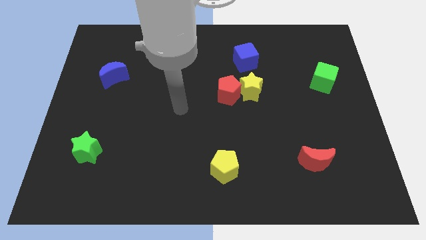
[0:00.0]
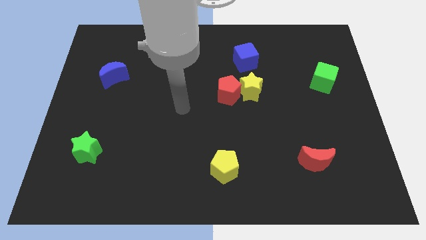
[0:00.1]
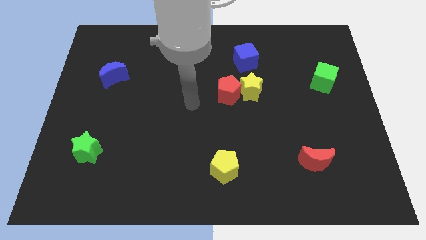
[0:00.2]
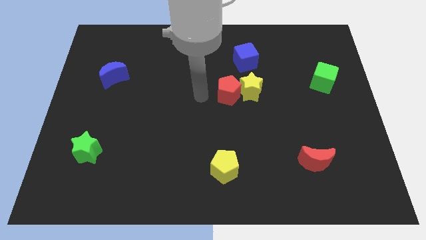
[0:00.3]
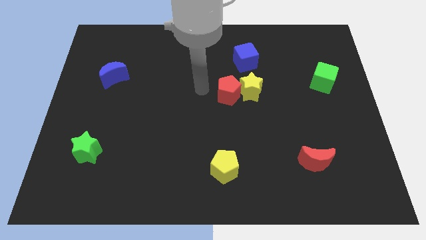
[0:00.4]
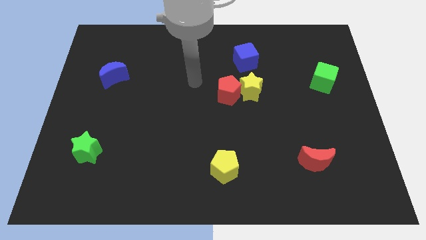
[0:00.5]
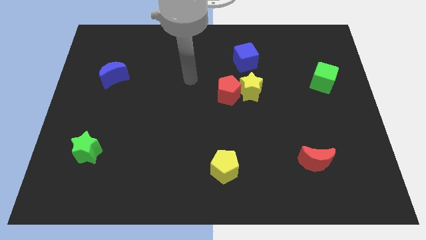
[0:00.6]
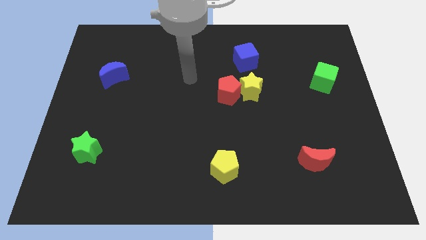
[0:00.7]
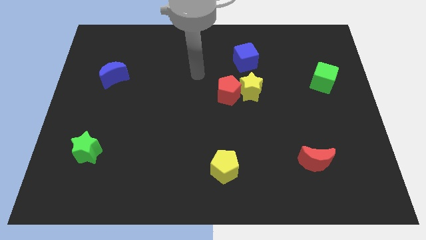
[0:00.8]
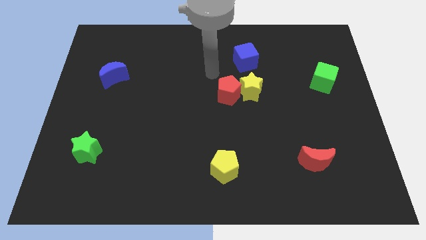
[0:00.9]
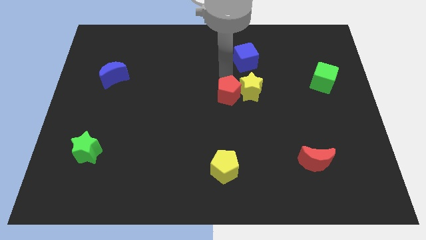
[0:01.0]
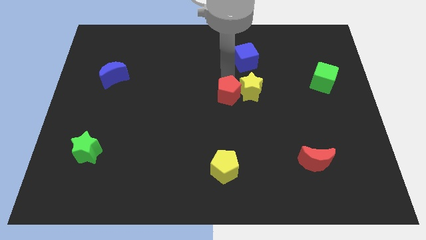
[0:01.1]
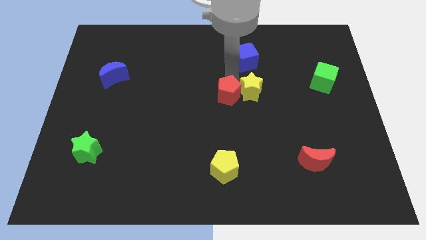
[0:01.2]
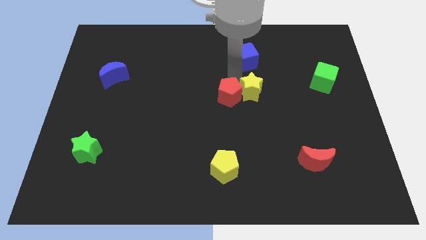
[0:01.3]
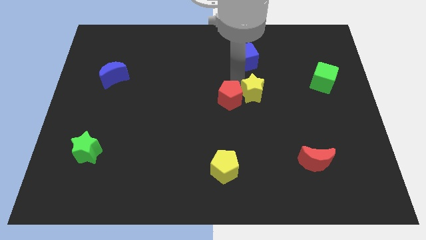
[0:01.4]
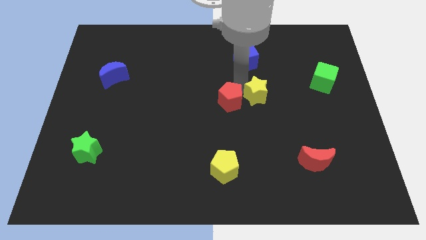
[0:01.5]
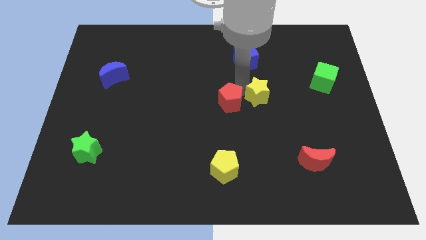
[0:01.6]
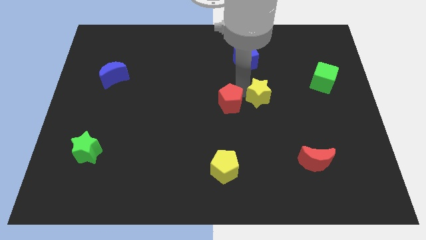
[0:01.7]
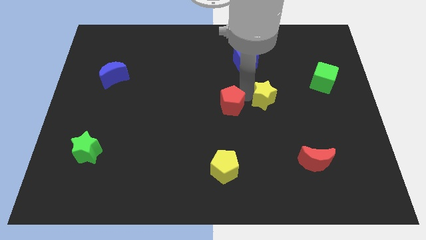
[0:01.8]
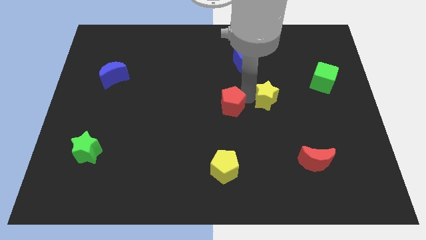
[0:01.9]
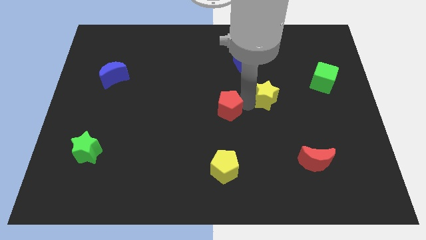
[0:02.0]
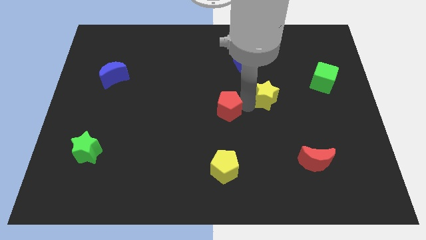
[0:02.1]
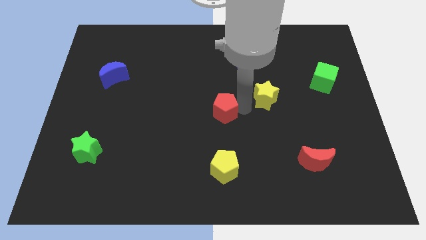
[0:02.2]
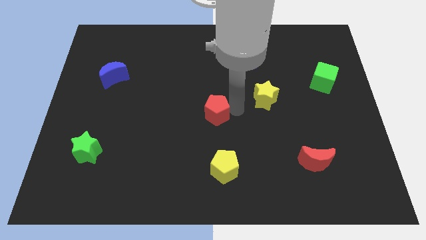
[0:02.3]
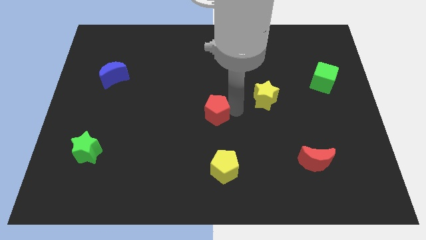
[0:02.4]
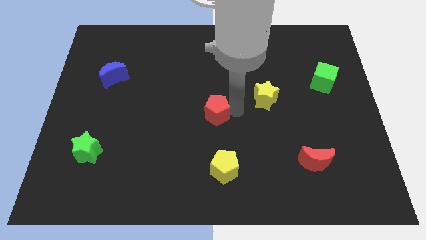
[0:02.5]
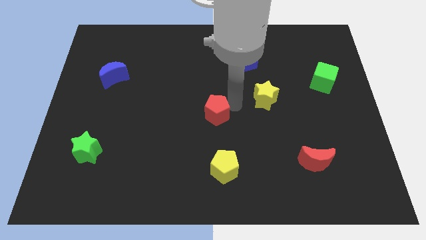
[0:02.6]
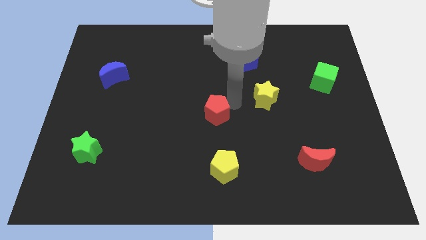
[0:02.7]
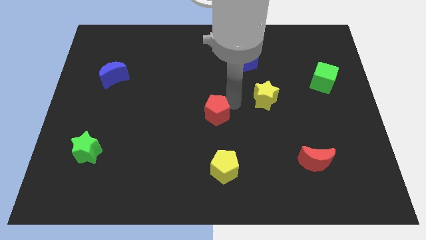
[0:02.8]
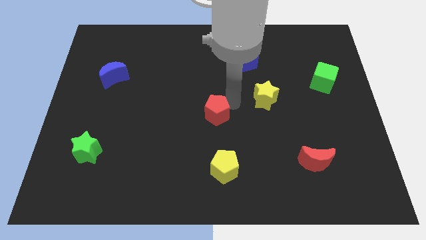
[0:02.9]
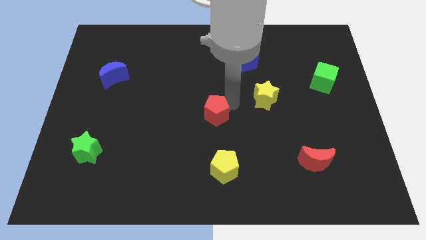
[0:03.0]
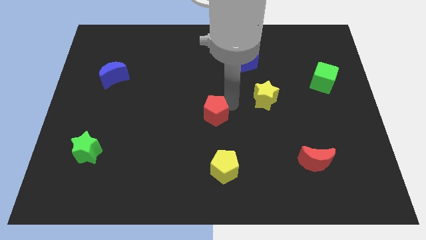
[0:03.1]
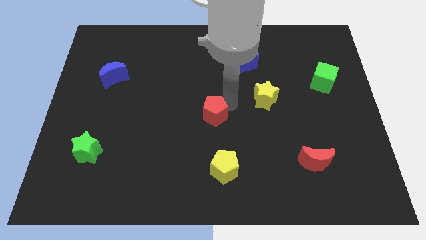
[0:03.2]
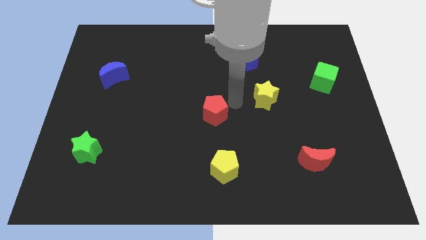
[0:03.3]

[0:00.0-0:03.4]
separate the red pentagon and the yellow star

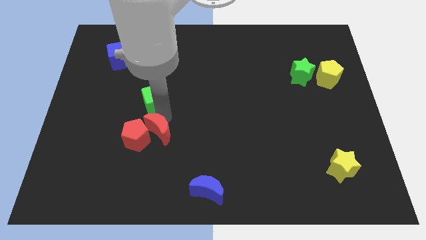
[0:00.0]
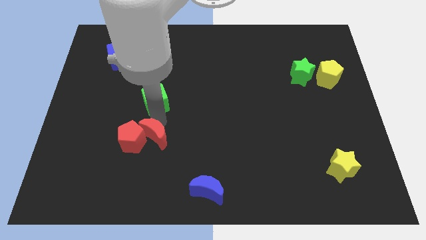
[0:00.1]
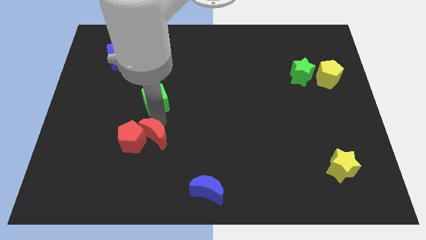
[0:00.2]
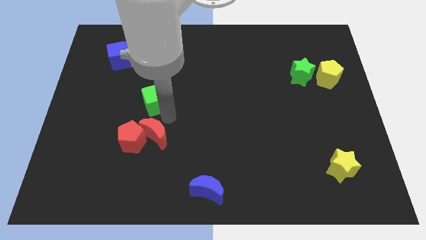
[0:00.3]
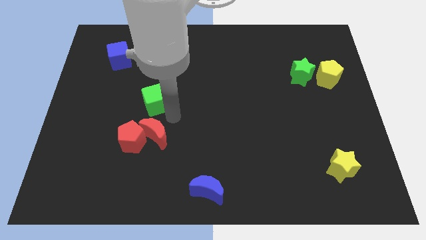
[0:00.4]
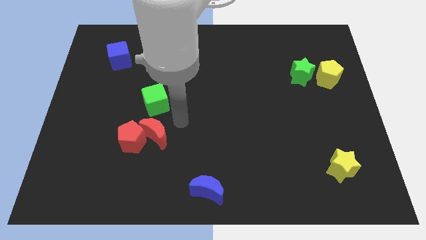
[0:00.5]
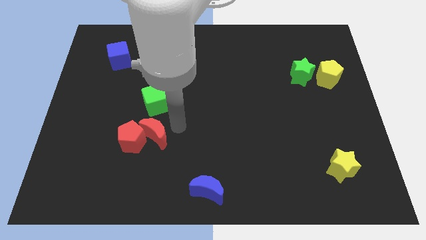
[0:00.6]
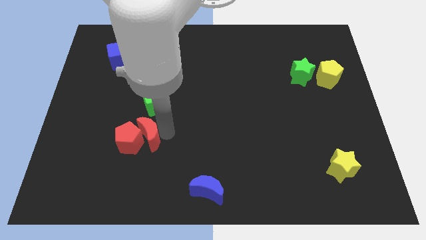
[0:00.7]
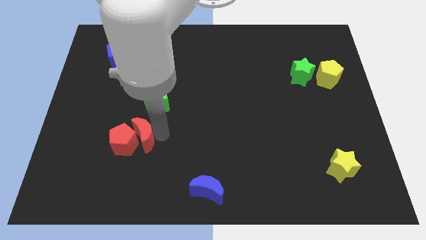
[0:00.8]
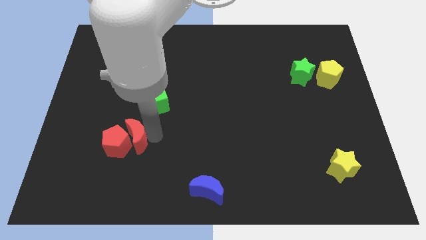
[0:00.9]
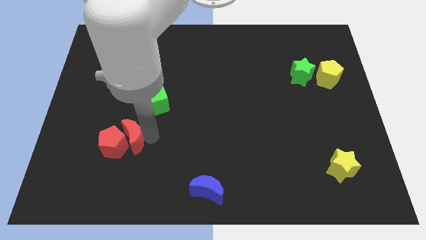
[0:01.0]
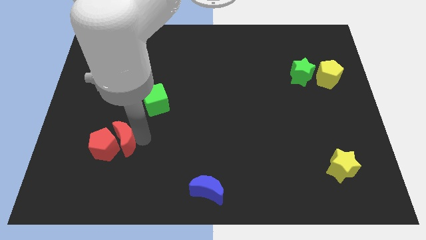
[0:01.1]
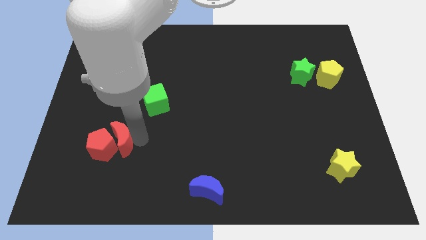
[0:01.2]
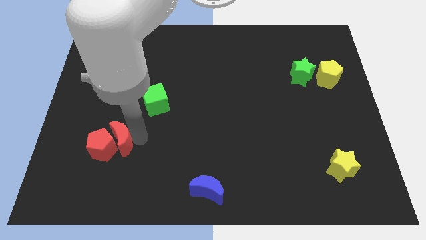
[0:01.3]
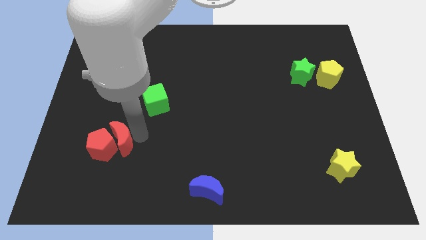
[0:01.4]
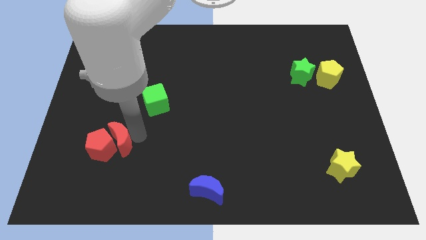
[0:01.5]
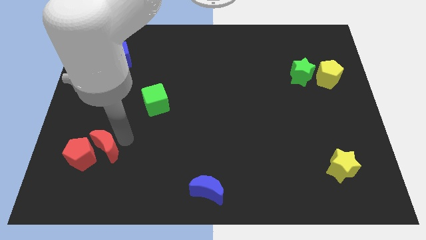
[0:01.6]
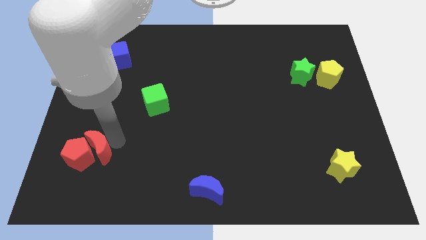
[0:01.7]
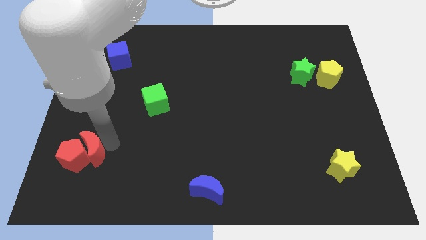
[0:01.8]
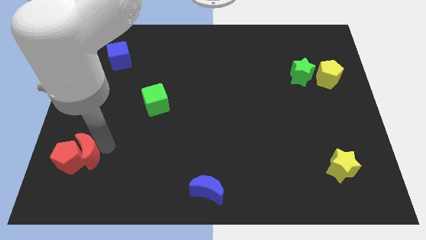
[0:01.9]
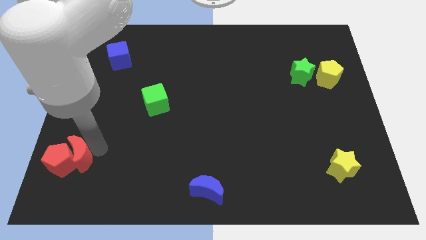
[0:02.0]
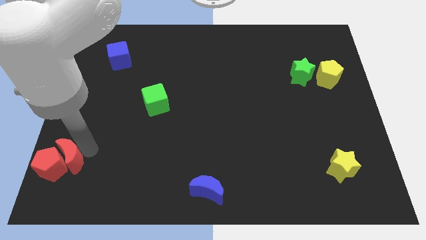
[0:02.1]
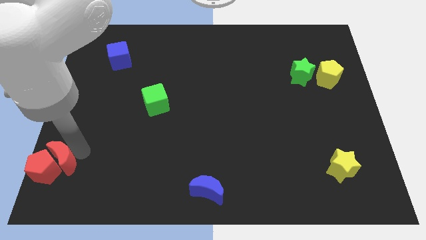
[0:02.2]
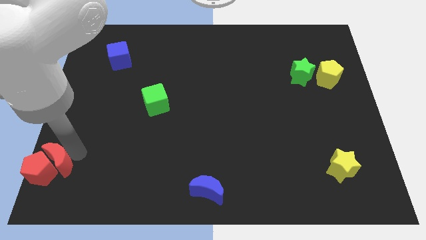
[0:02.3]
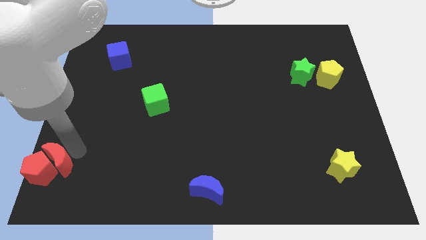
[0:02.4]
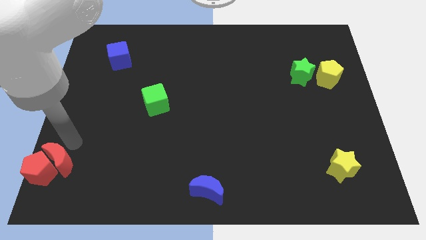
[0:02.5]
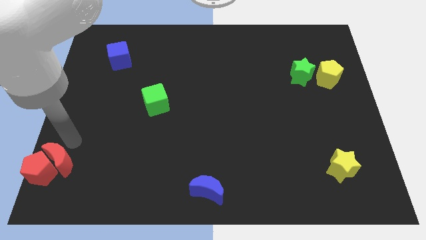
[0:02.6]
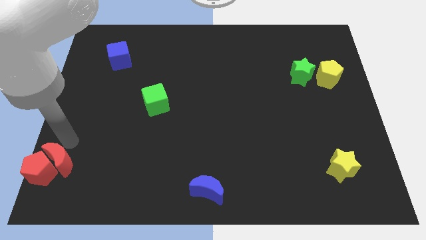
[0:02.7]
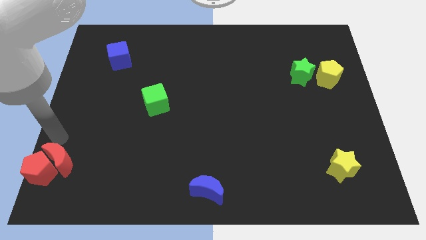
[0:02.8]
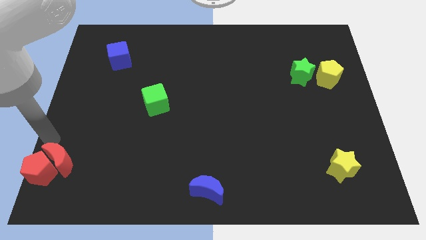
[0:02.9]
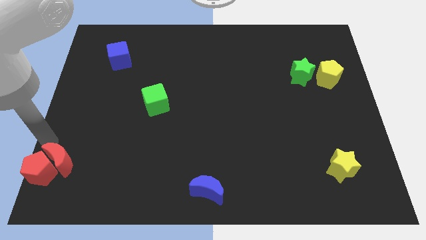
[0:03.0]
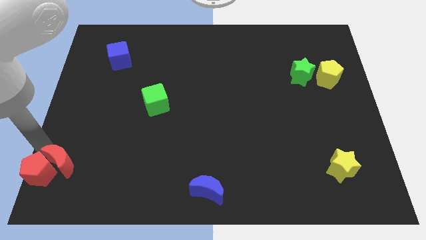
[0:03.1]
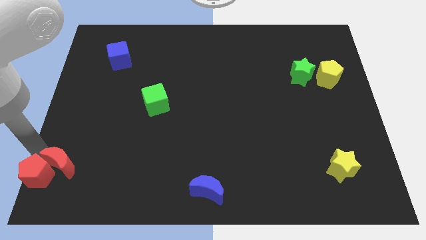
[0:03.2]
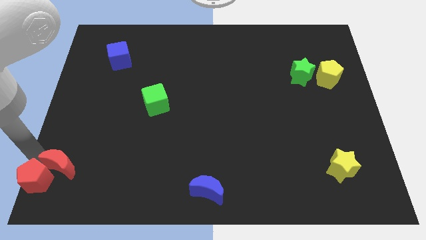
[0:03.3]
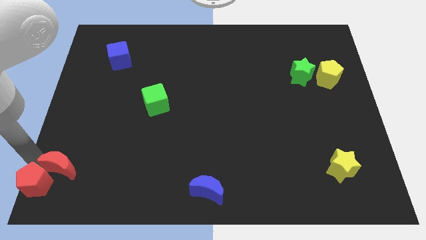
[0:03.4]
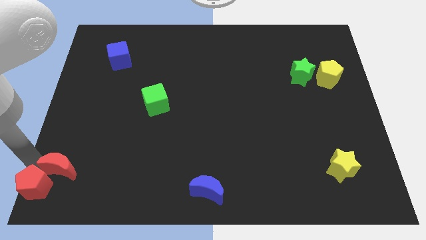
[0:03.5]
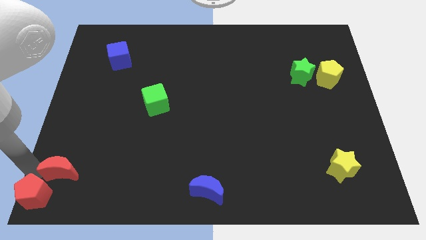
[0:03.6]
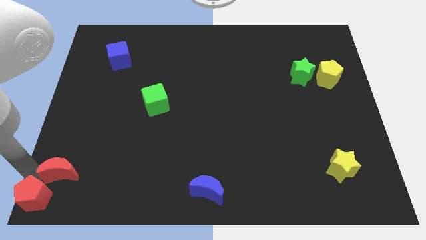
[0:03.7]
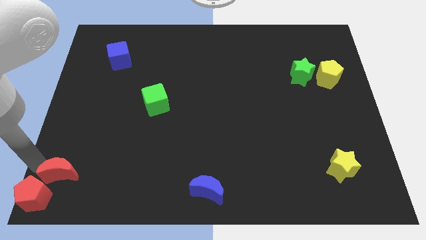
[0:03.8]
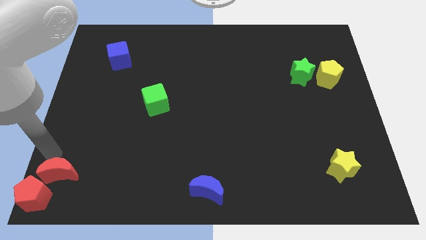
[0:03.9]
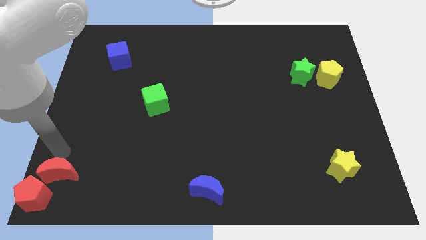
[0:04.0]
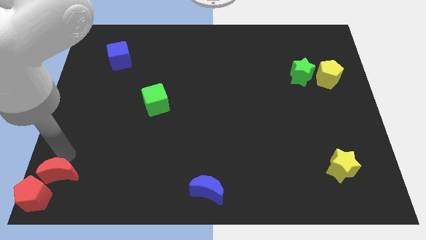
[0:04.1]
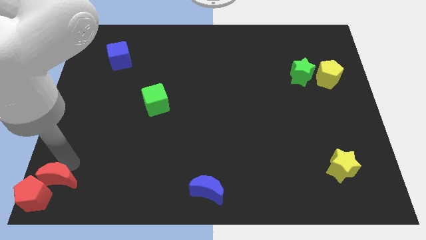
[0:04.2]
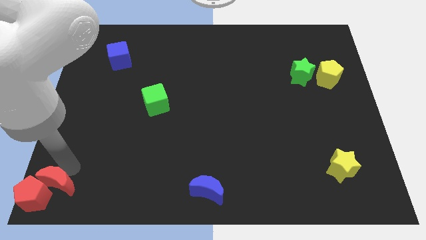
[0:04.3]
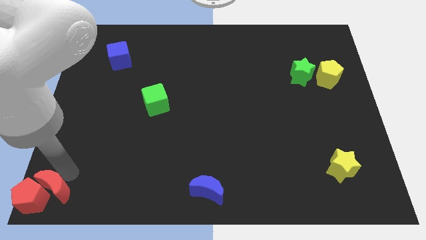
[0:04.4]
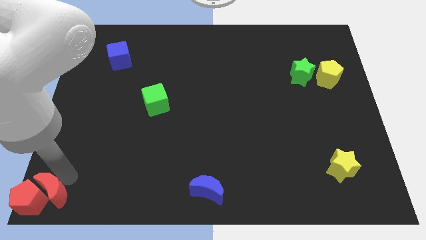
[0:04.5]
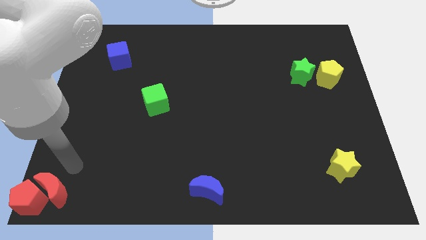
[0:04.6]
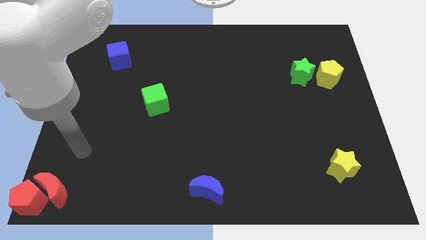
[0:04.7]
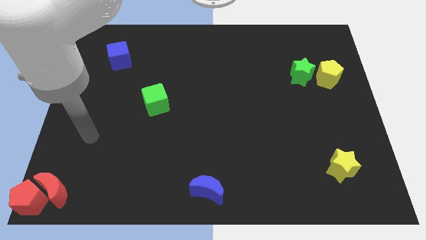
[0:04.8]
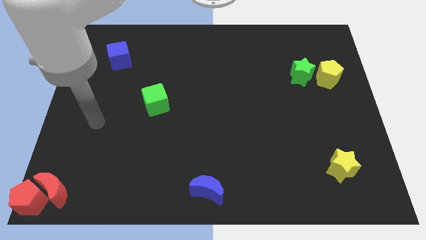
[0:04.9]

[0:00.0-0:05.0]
push two red blocks to the bottom left corner of the board

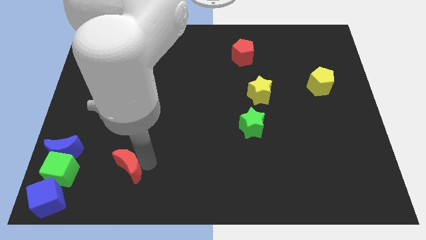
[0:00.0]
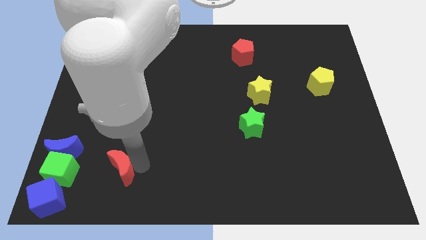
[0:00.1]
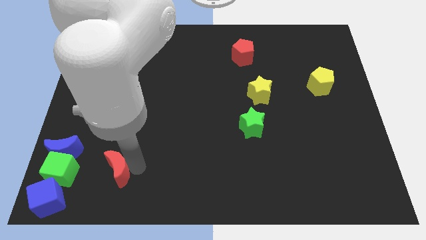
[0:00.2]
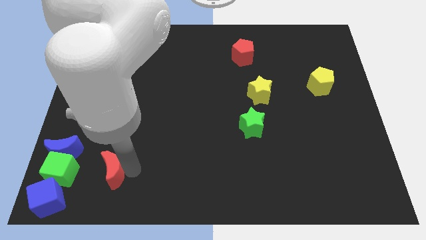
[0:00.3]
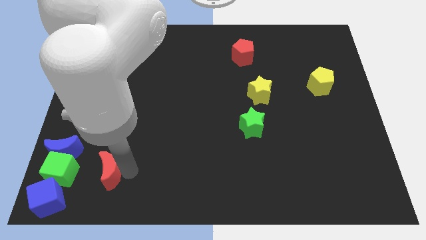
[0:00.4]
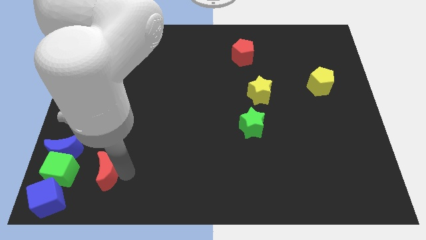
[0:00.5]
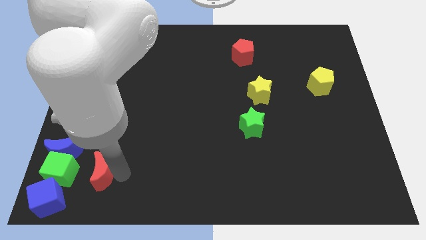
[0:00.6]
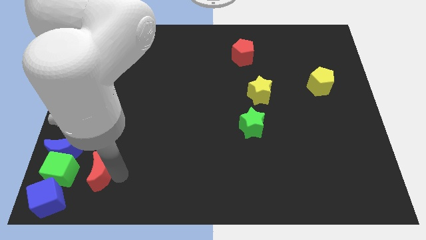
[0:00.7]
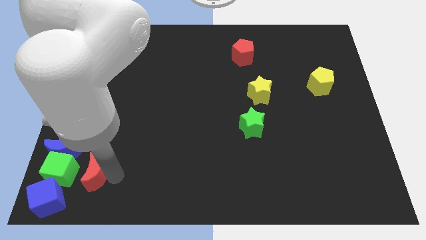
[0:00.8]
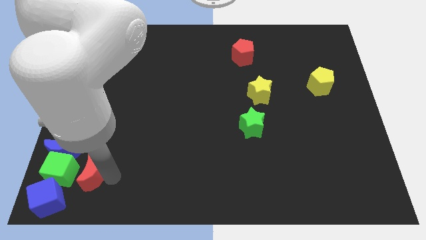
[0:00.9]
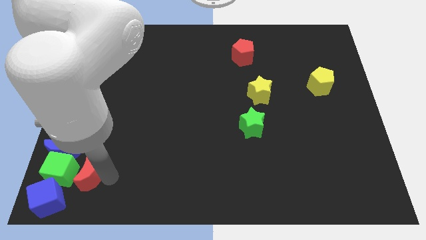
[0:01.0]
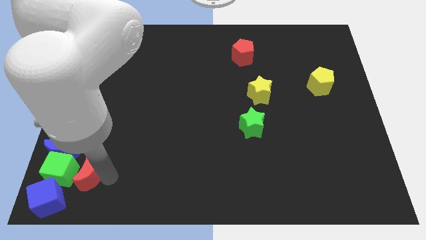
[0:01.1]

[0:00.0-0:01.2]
place the red moon to the right side of green cube
